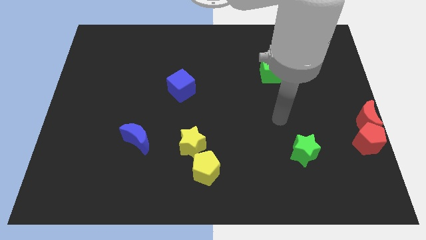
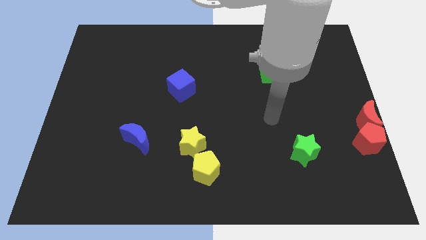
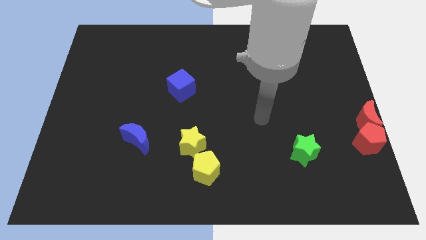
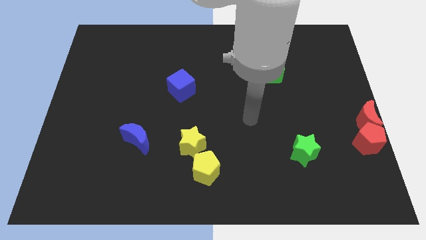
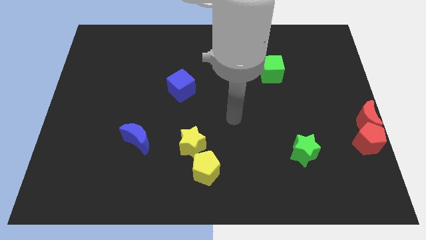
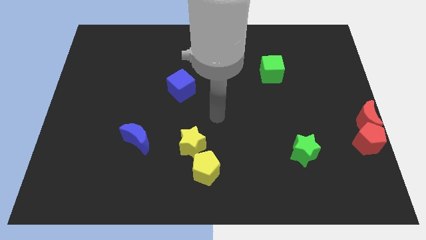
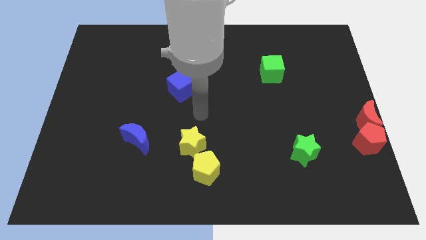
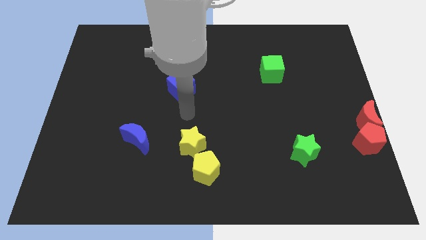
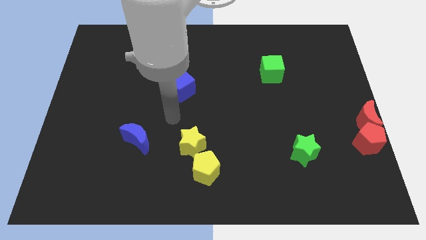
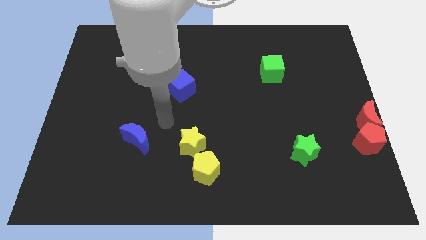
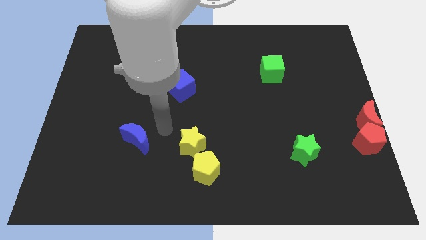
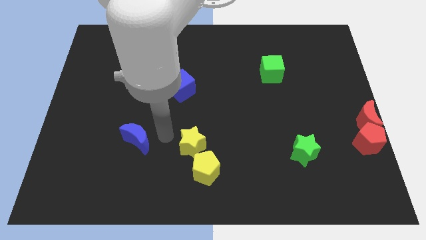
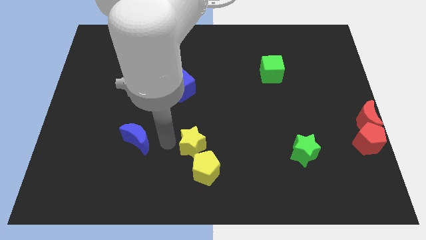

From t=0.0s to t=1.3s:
place the arm left to the yellow star

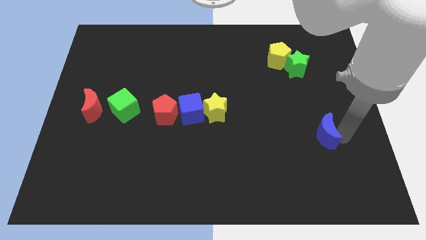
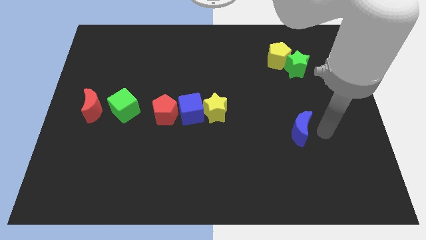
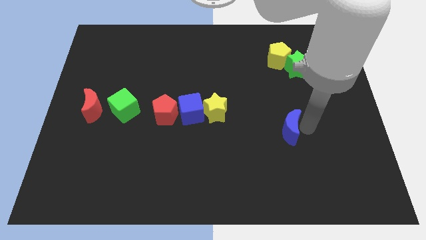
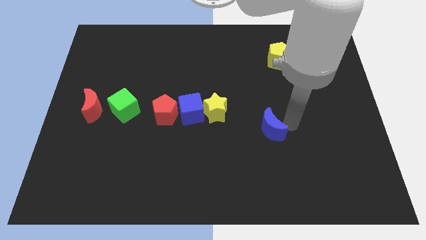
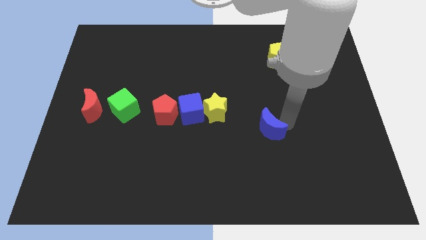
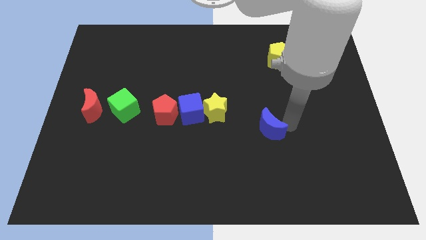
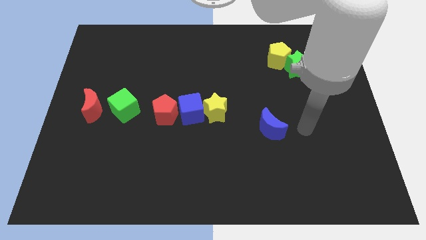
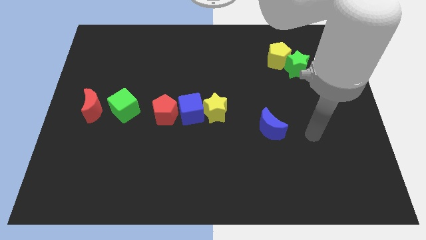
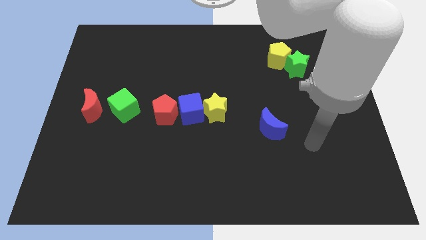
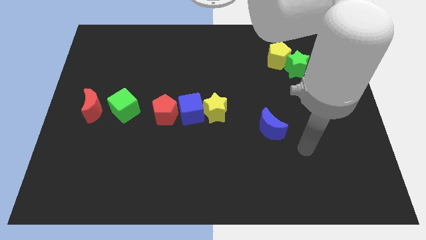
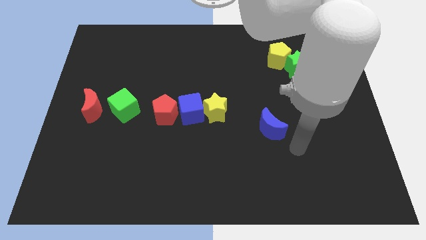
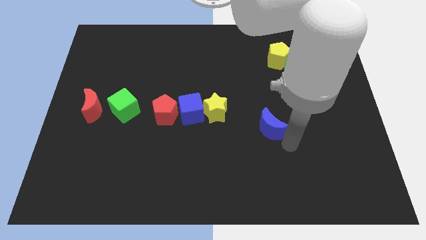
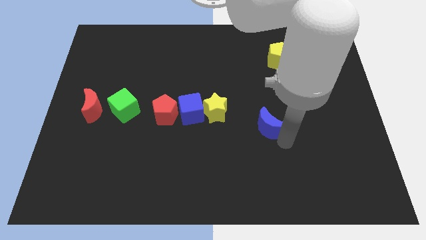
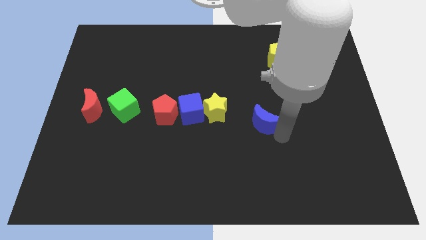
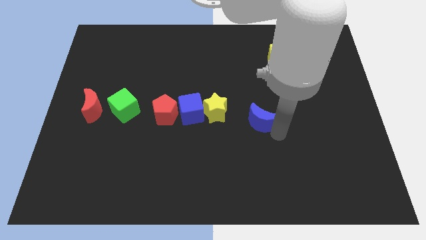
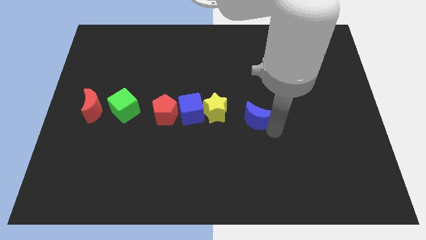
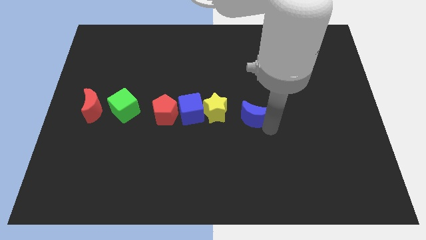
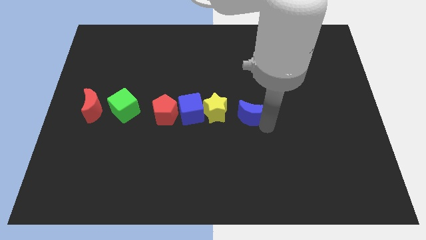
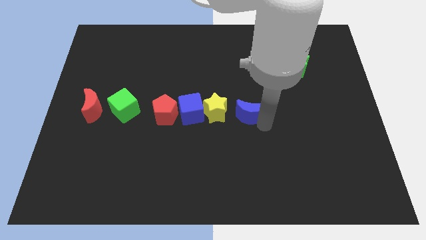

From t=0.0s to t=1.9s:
drag the blue moon close to the yellow star

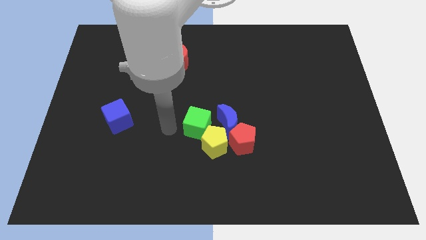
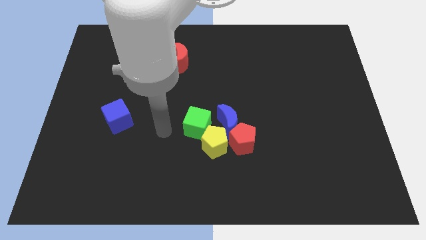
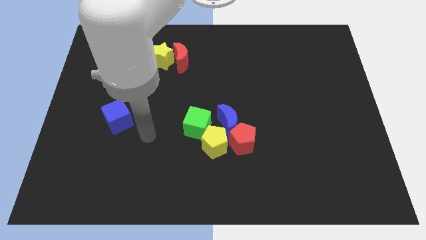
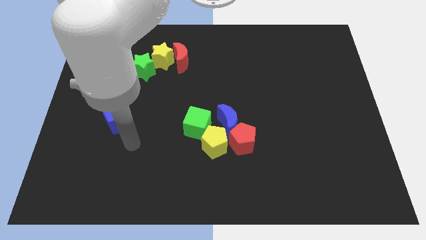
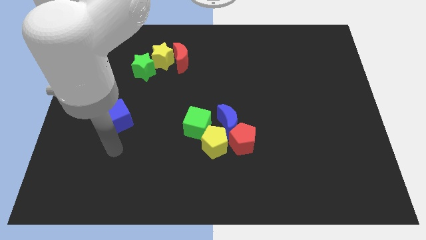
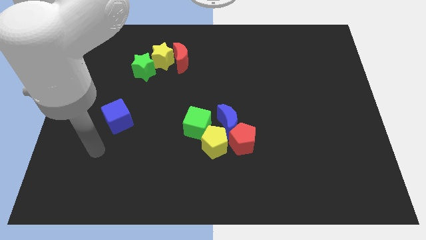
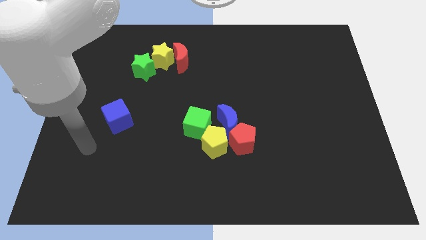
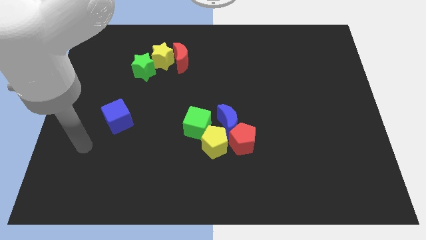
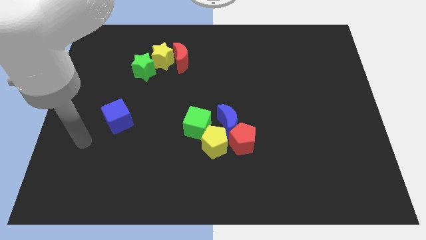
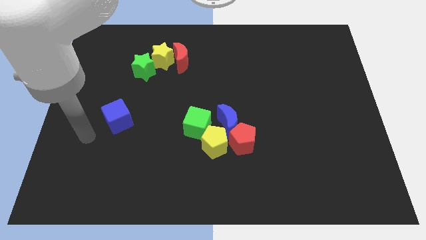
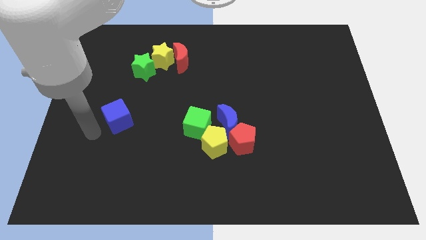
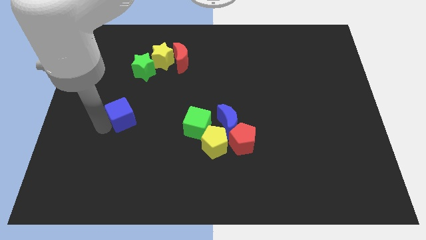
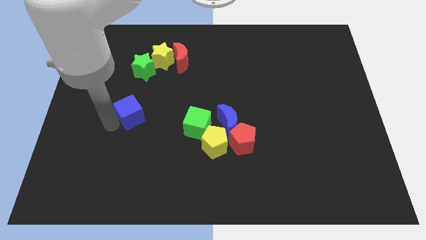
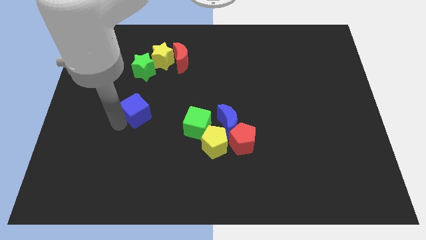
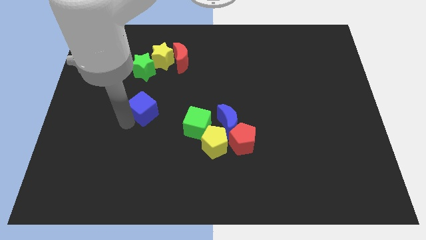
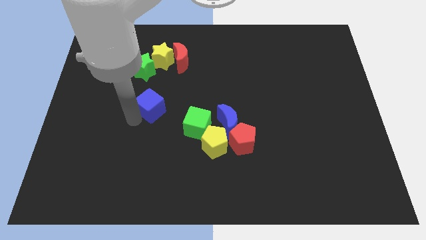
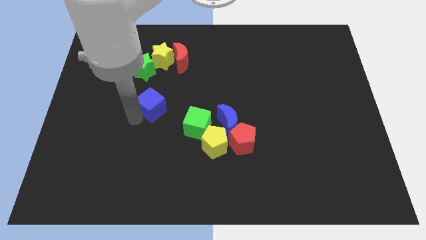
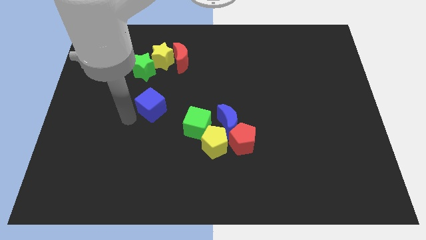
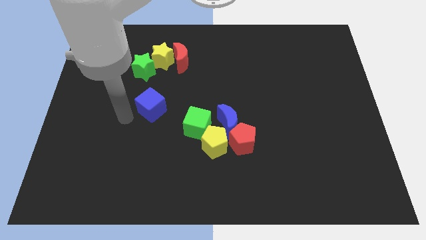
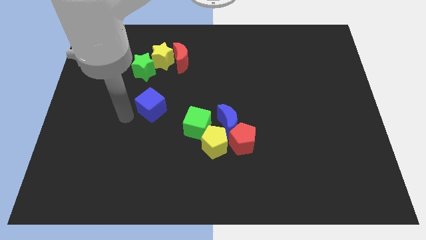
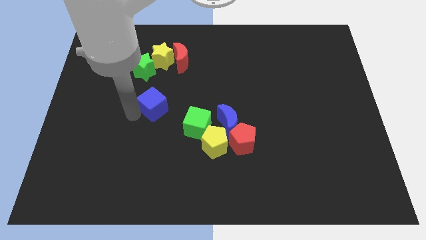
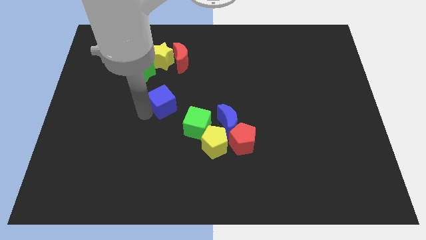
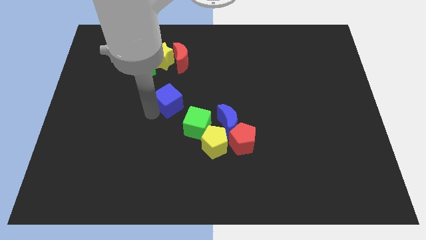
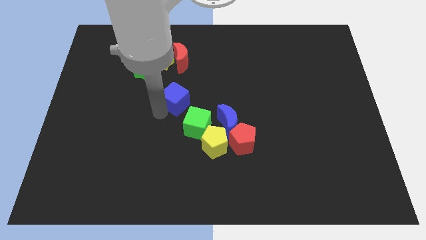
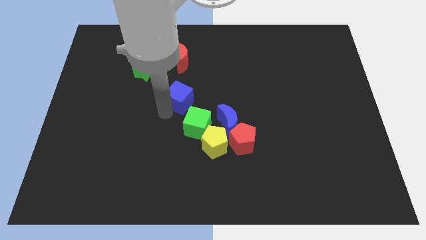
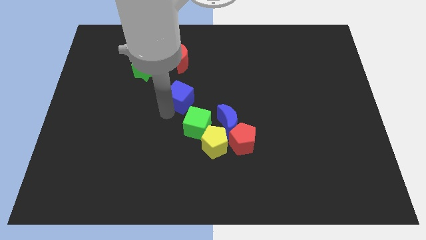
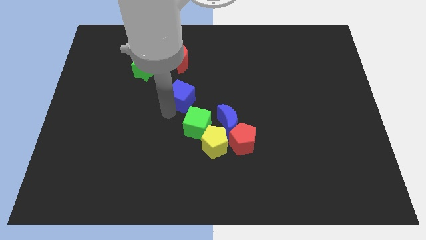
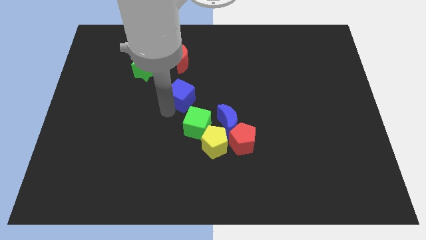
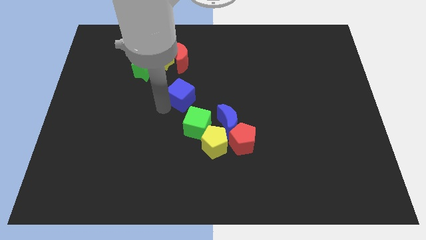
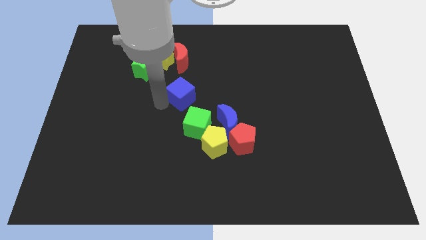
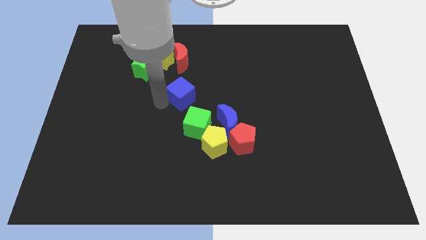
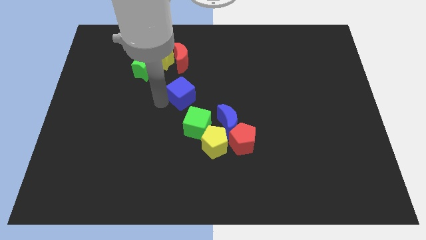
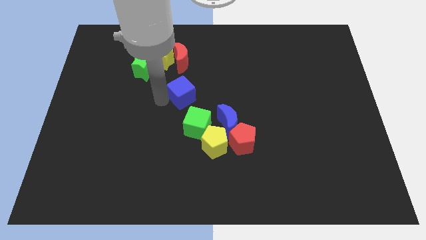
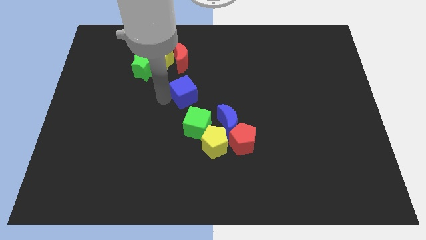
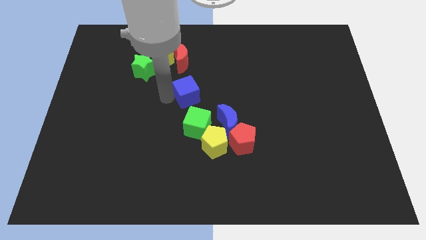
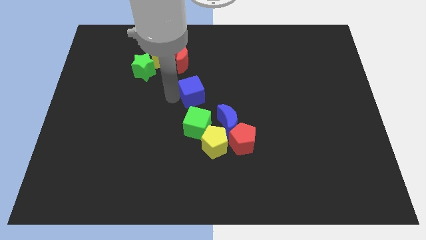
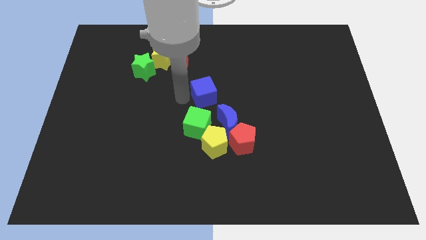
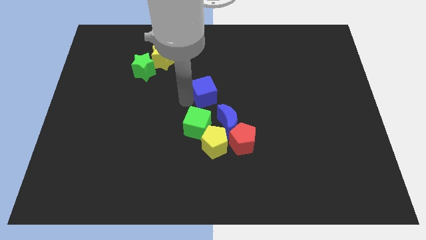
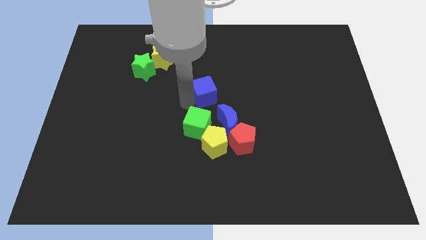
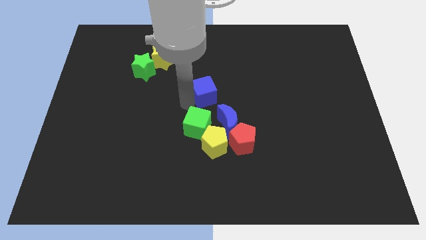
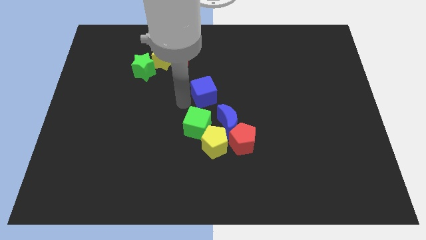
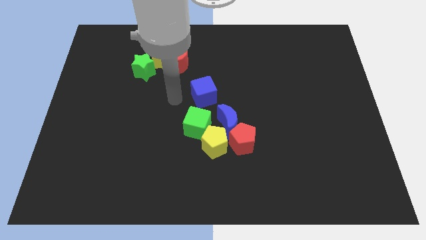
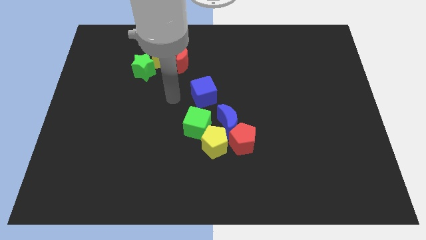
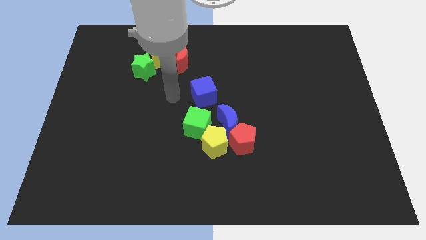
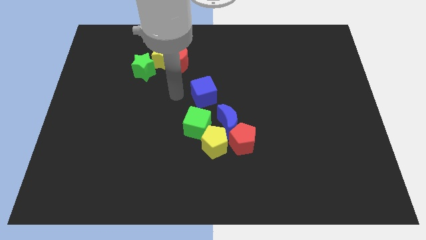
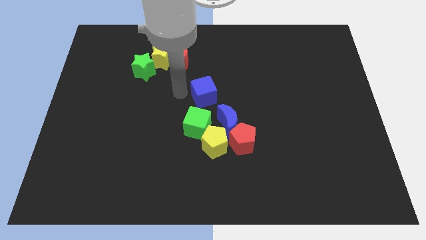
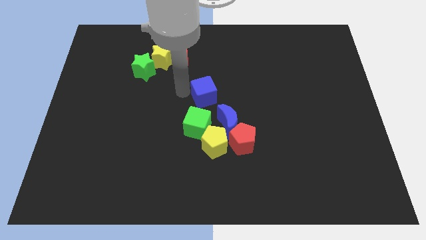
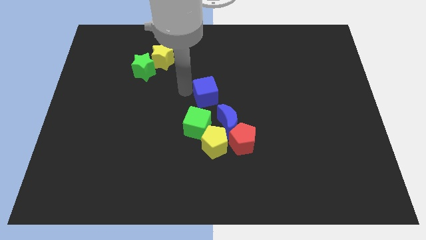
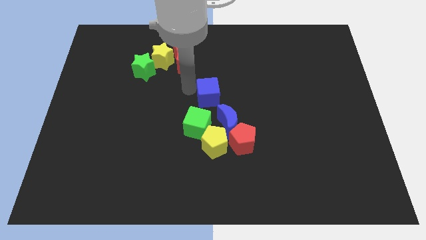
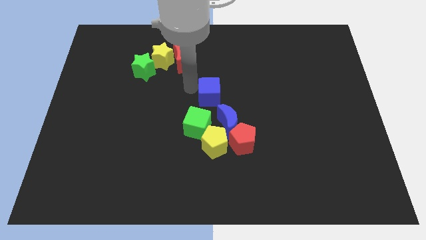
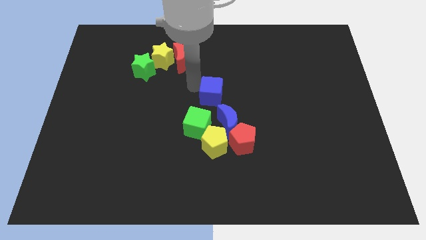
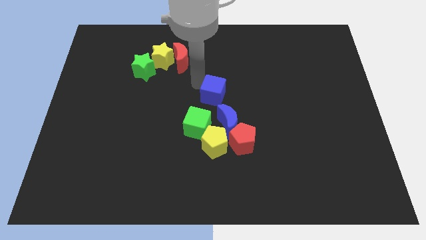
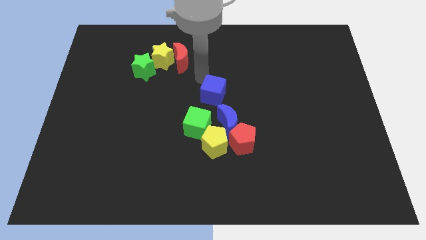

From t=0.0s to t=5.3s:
push the blue cube above the blue crescent

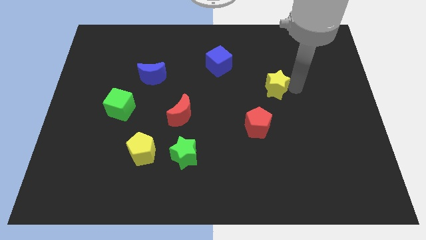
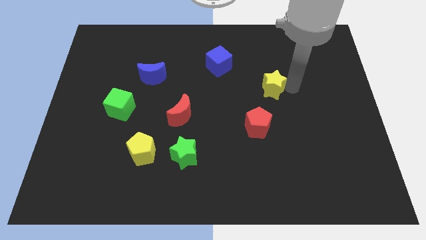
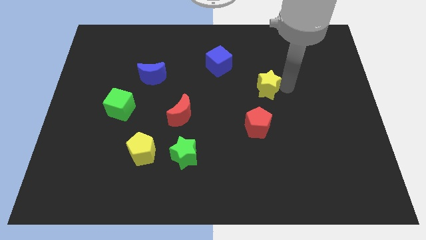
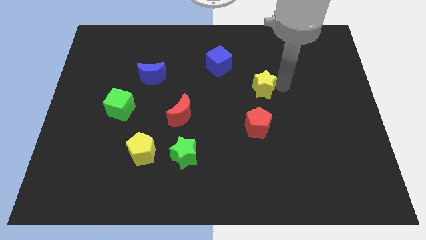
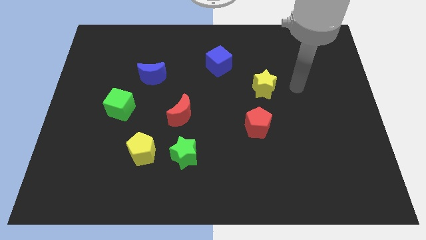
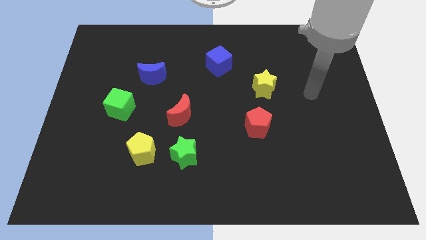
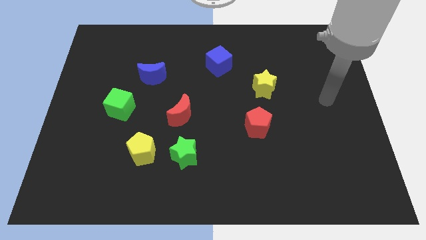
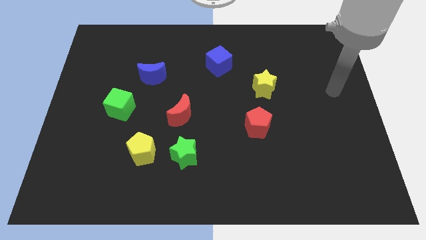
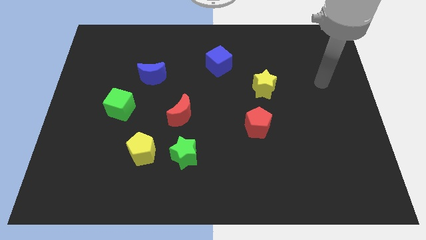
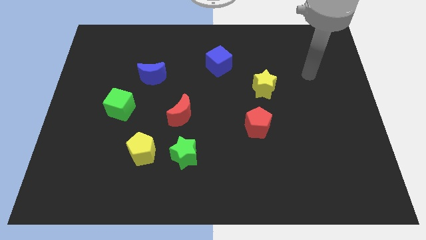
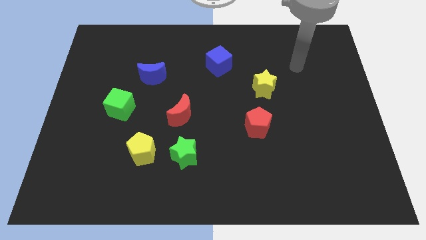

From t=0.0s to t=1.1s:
move the arm away from the yellow star
